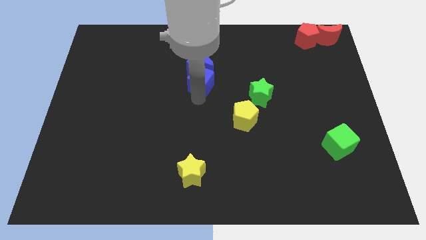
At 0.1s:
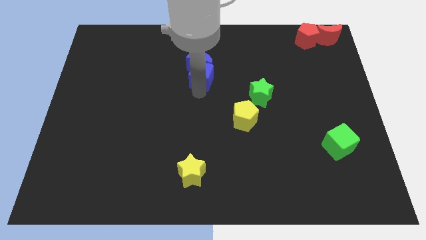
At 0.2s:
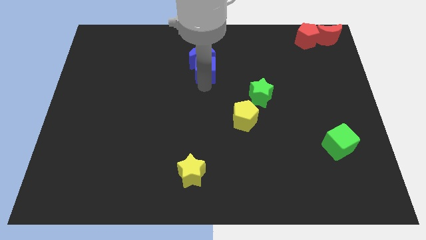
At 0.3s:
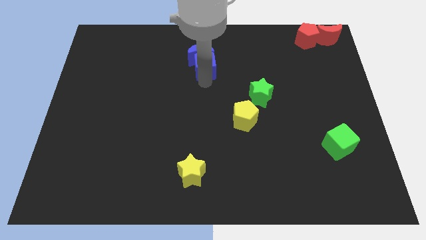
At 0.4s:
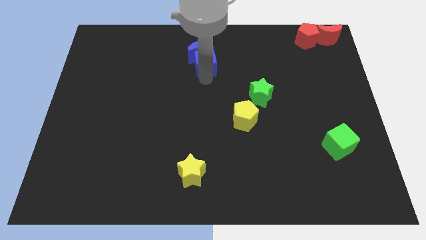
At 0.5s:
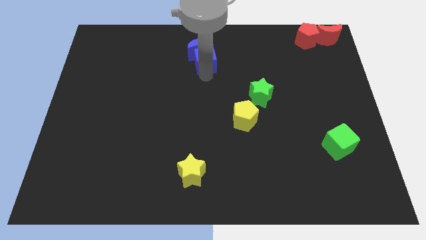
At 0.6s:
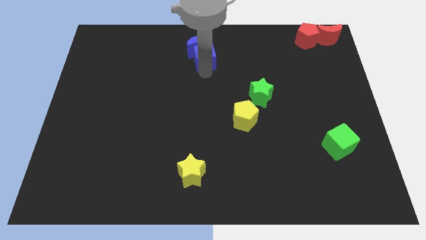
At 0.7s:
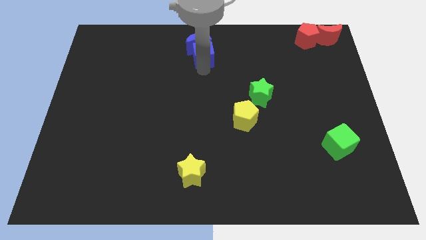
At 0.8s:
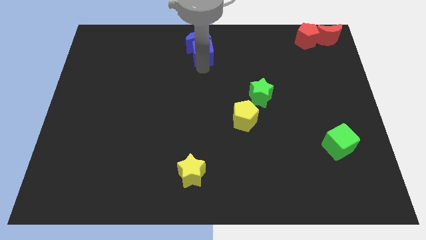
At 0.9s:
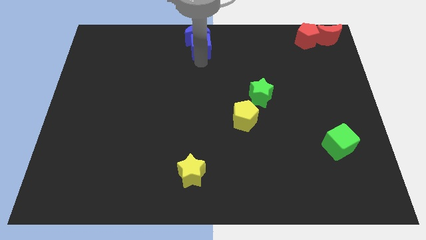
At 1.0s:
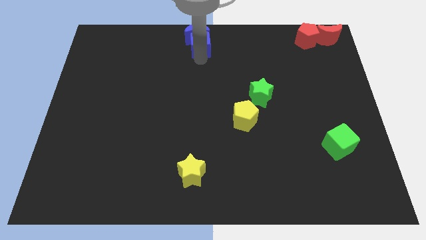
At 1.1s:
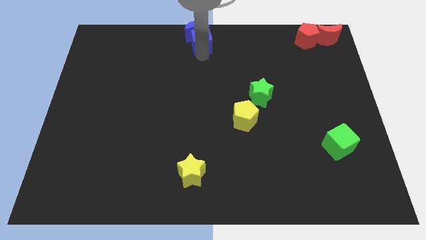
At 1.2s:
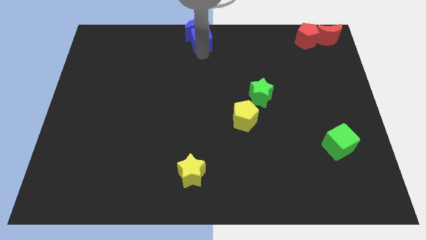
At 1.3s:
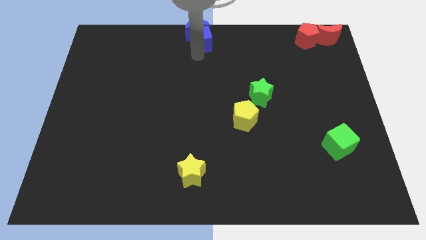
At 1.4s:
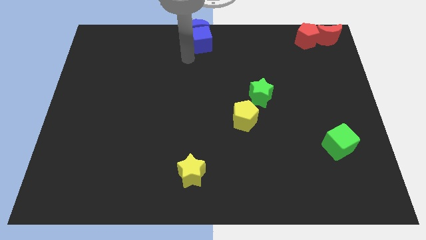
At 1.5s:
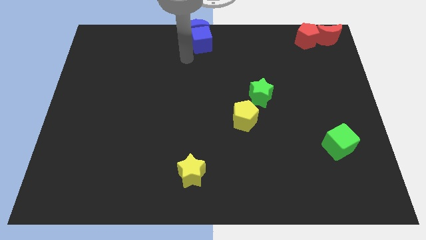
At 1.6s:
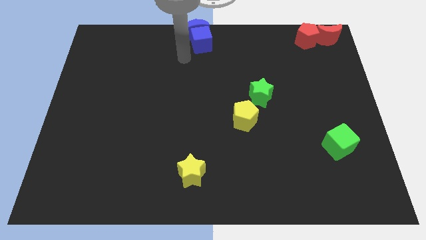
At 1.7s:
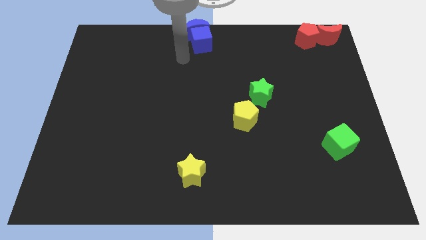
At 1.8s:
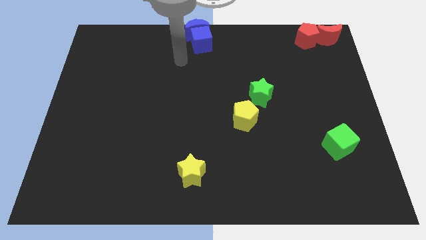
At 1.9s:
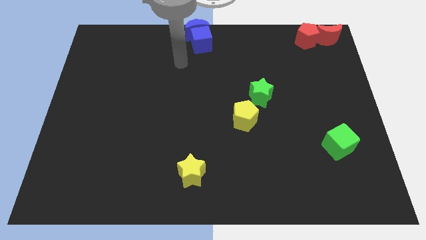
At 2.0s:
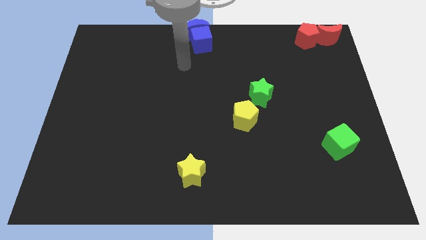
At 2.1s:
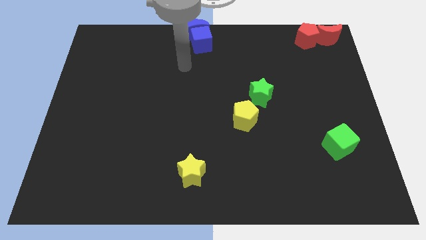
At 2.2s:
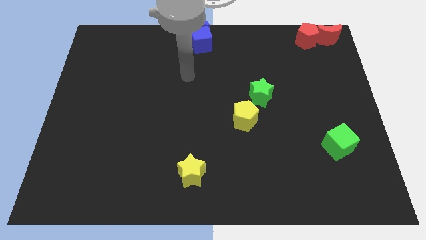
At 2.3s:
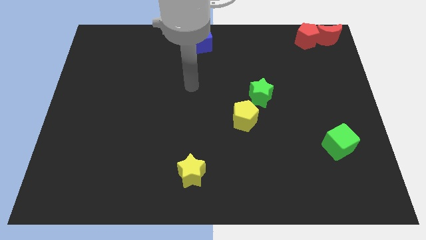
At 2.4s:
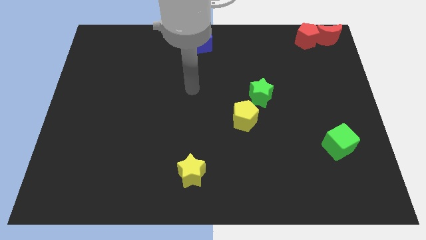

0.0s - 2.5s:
slide blue blocks to the center top of the board

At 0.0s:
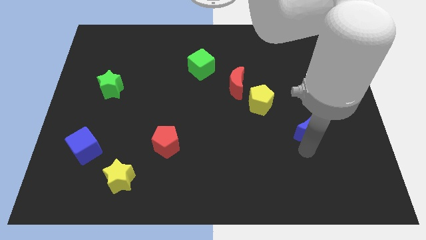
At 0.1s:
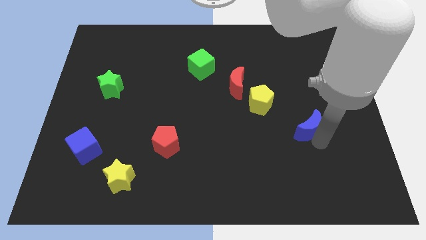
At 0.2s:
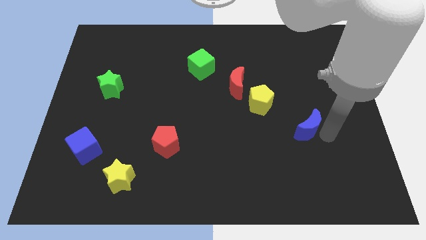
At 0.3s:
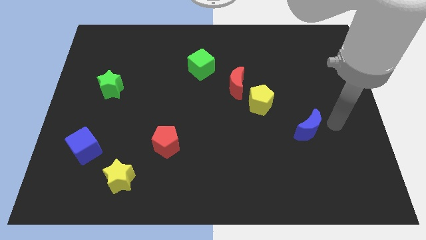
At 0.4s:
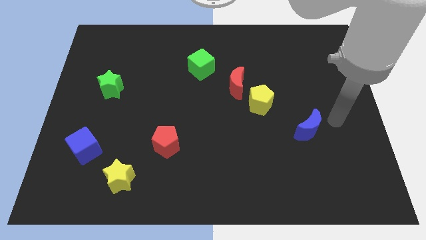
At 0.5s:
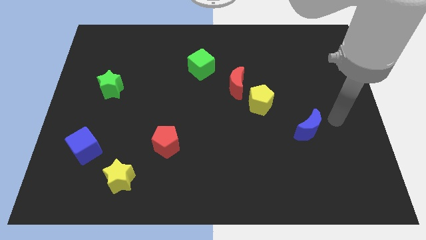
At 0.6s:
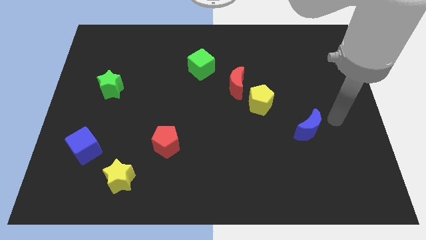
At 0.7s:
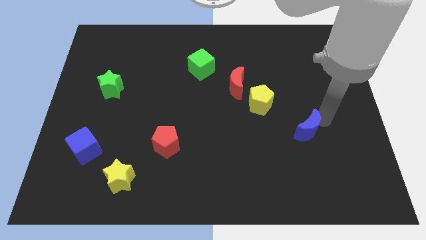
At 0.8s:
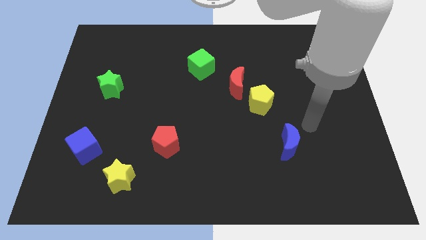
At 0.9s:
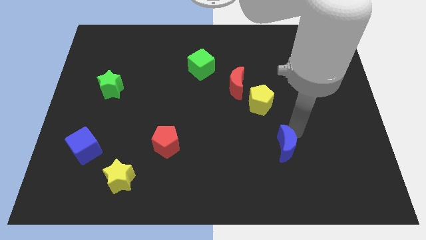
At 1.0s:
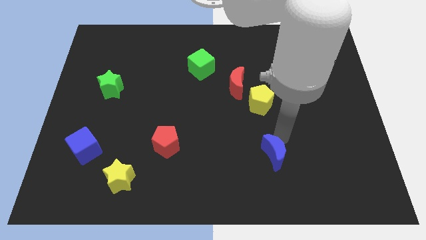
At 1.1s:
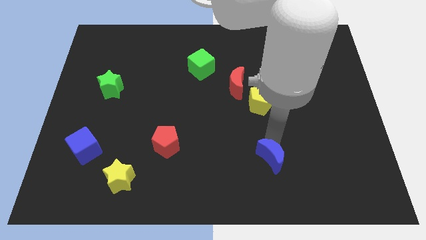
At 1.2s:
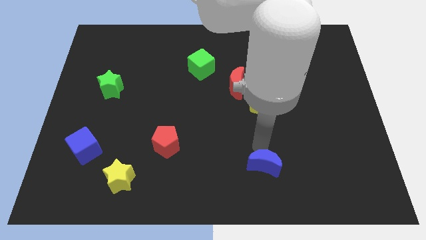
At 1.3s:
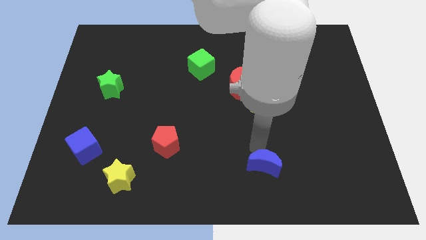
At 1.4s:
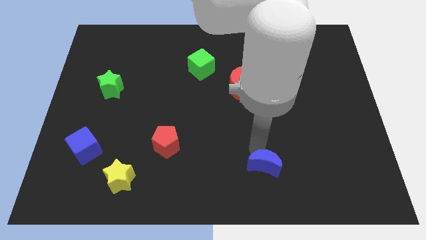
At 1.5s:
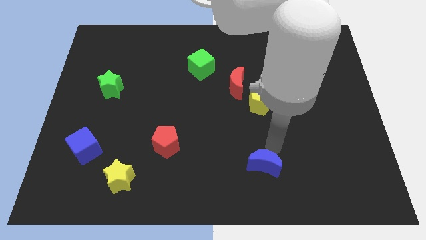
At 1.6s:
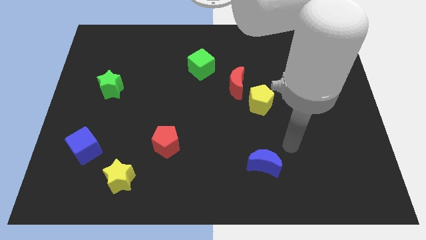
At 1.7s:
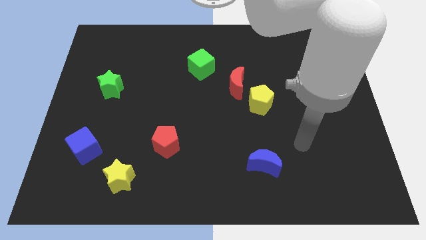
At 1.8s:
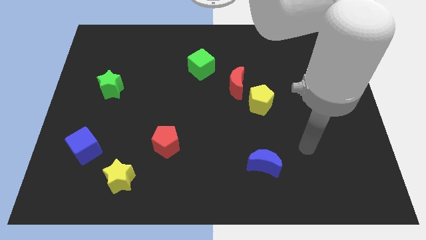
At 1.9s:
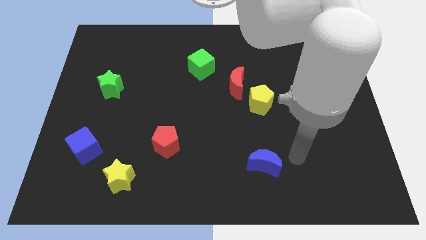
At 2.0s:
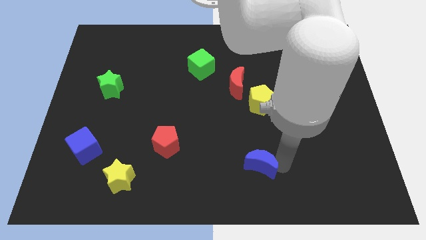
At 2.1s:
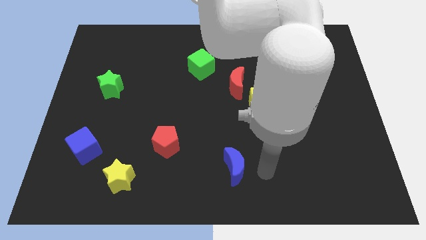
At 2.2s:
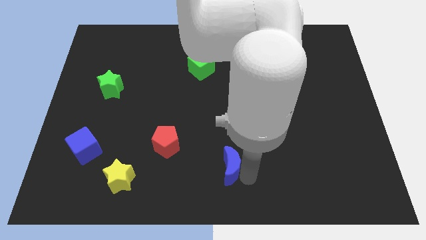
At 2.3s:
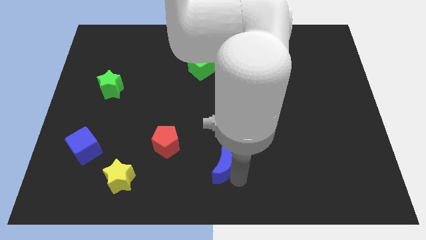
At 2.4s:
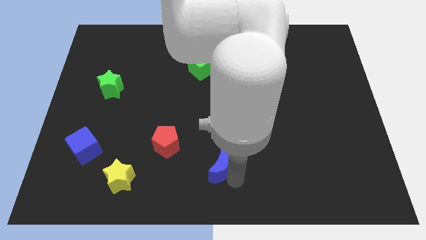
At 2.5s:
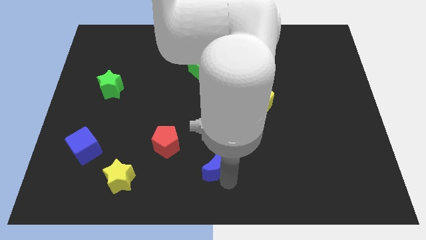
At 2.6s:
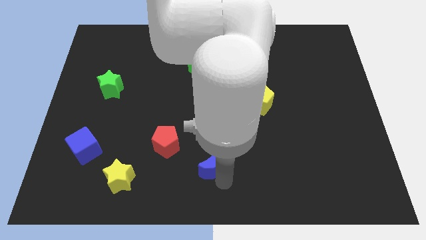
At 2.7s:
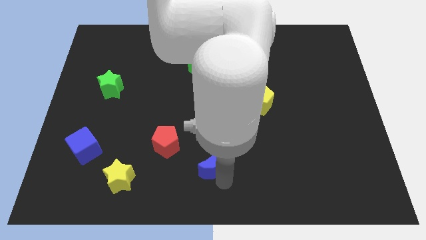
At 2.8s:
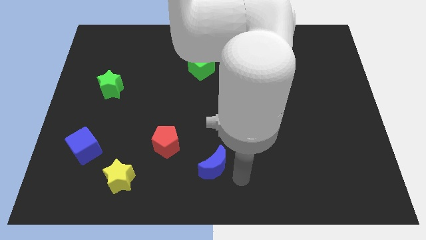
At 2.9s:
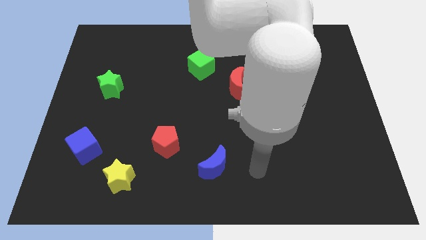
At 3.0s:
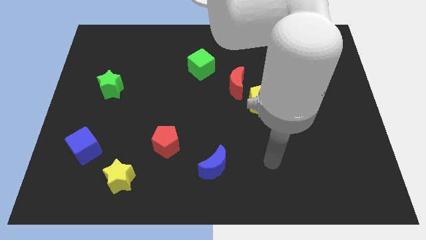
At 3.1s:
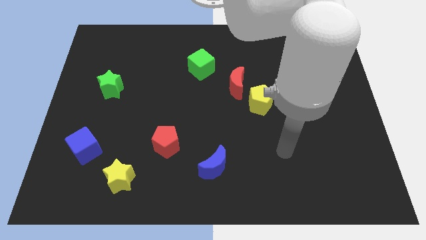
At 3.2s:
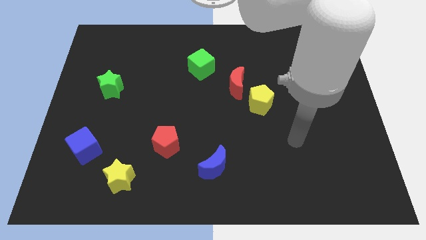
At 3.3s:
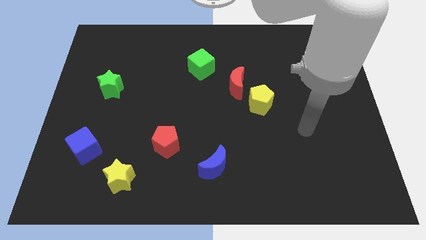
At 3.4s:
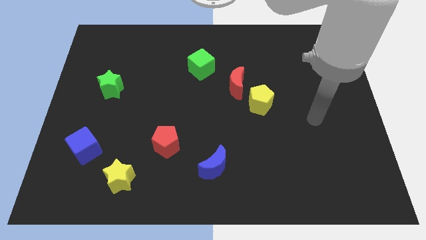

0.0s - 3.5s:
place the blue crescent at the right side of the red pentagon

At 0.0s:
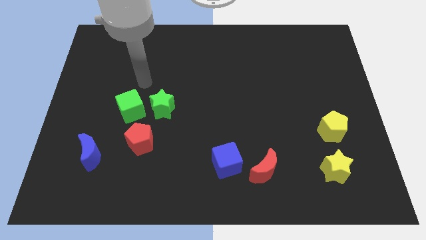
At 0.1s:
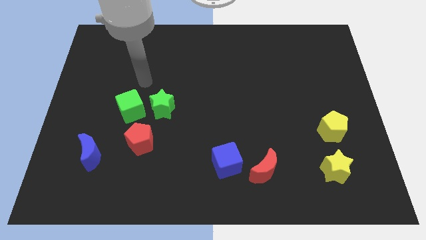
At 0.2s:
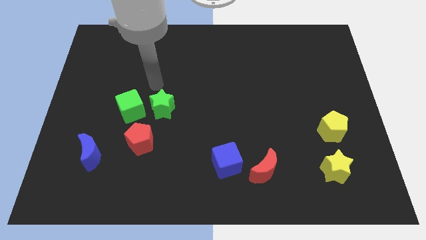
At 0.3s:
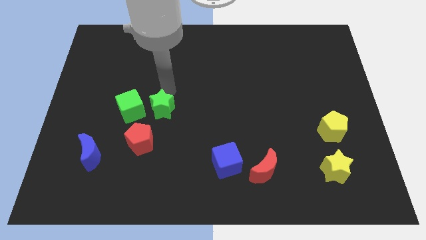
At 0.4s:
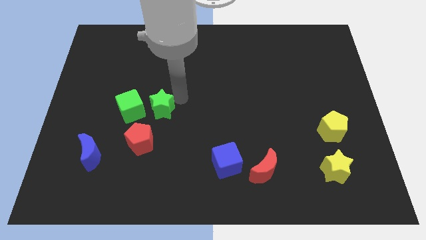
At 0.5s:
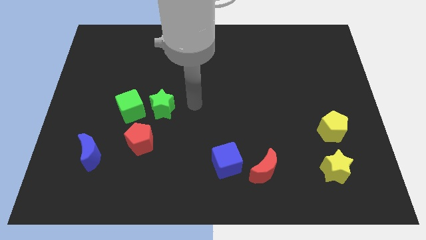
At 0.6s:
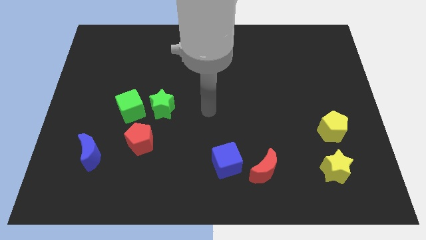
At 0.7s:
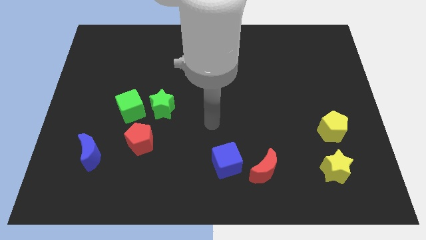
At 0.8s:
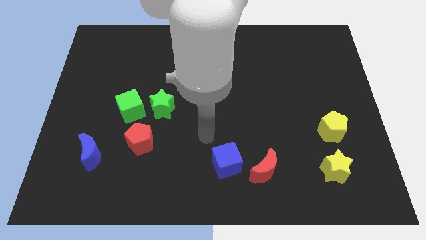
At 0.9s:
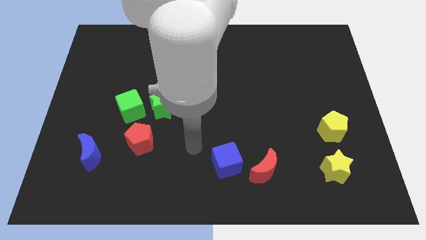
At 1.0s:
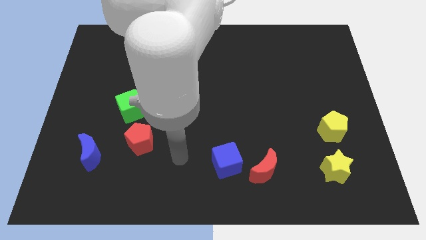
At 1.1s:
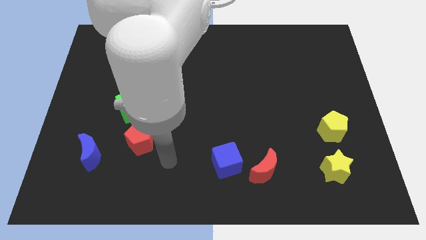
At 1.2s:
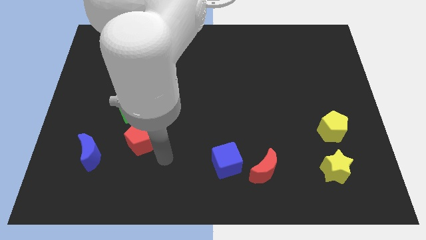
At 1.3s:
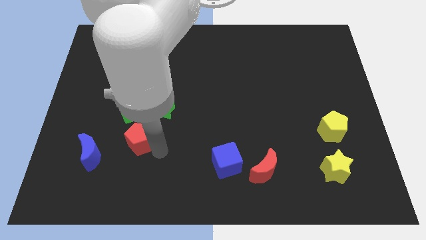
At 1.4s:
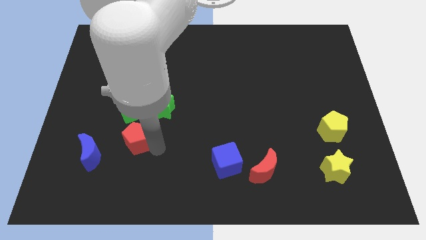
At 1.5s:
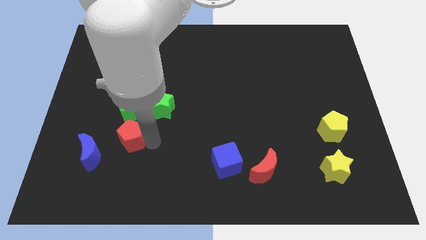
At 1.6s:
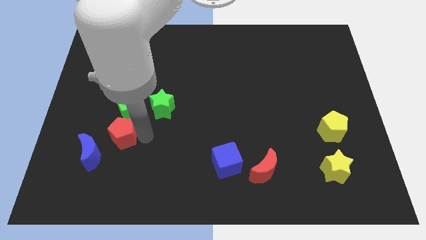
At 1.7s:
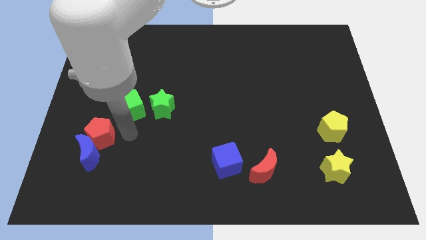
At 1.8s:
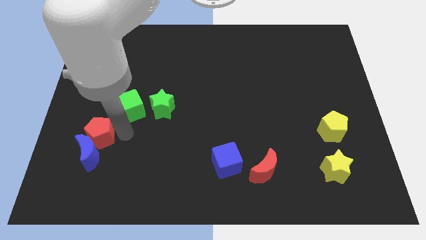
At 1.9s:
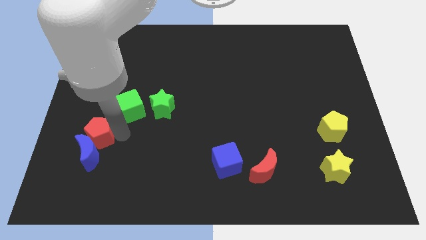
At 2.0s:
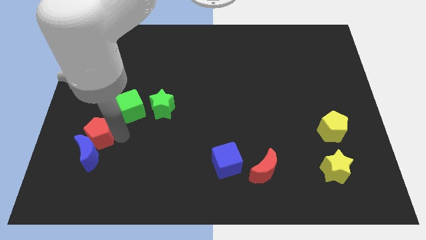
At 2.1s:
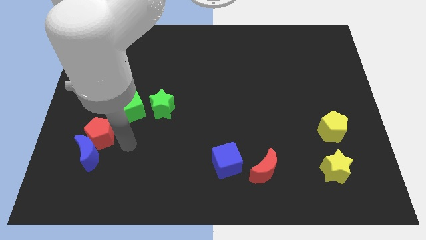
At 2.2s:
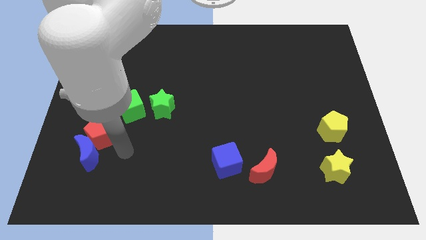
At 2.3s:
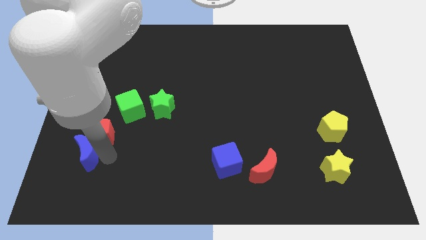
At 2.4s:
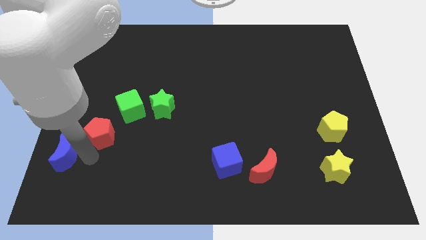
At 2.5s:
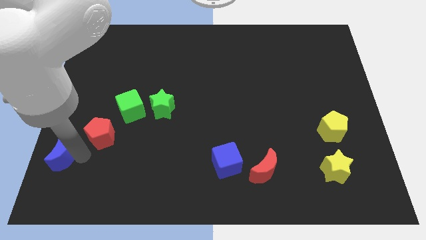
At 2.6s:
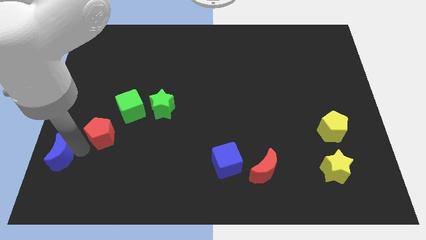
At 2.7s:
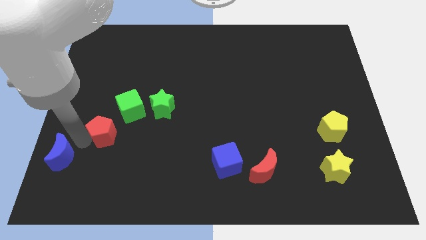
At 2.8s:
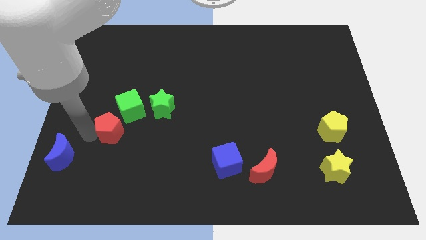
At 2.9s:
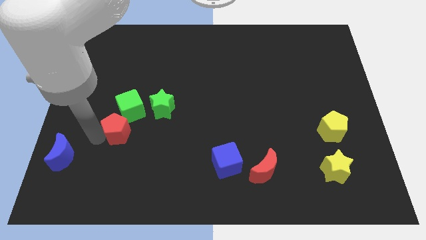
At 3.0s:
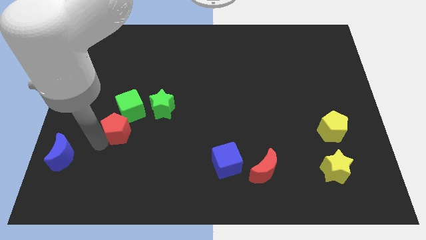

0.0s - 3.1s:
move the red pentagon to the bottom of the green cube

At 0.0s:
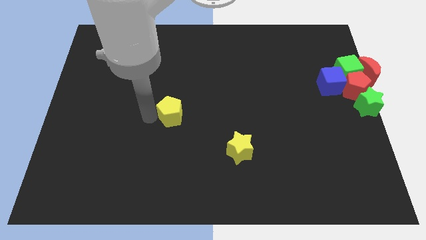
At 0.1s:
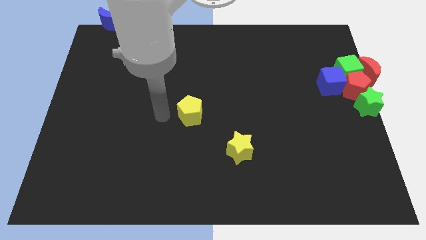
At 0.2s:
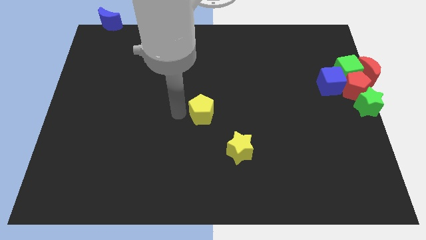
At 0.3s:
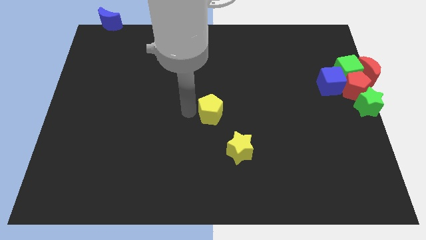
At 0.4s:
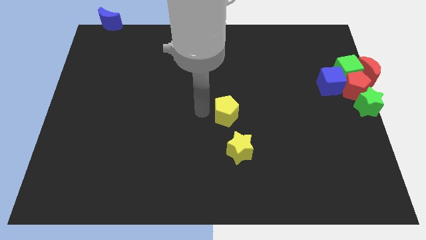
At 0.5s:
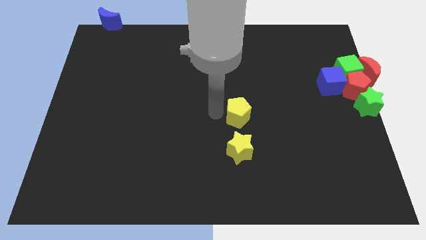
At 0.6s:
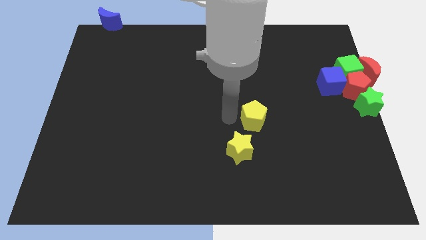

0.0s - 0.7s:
move the yellow pentagon top of the yellow star
